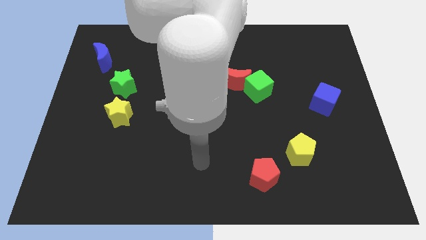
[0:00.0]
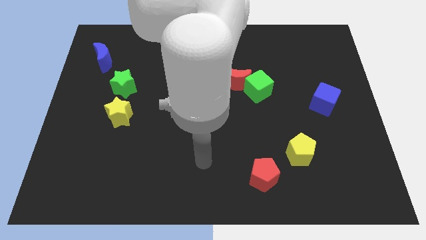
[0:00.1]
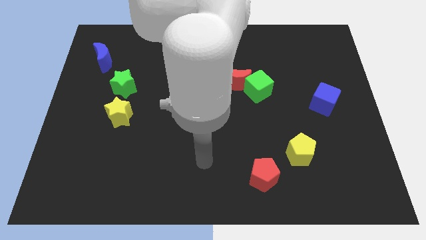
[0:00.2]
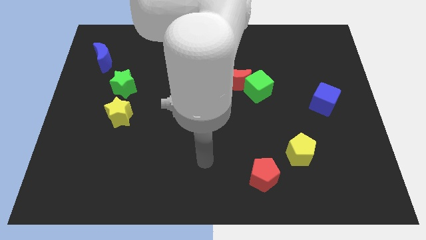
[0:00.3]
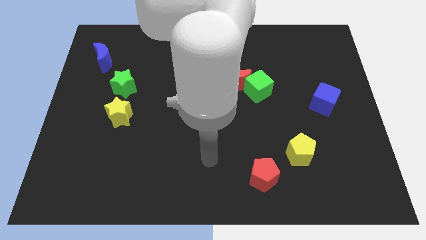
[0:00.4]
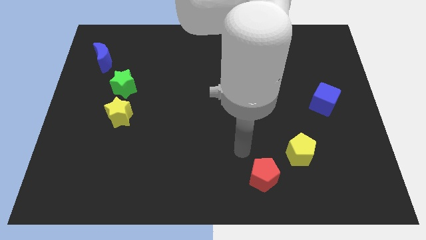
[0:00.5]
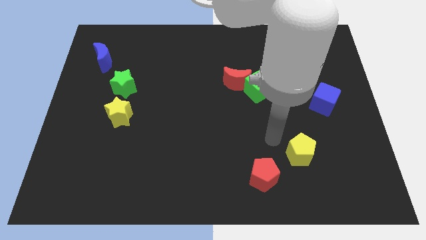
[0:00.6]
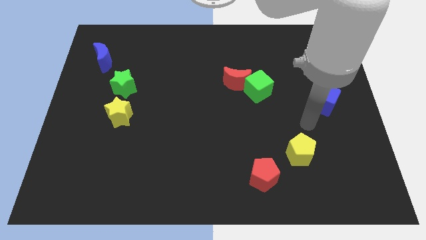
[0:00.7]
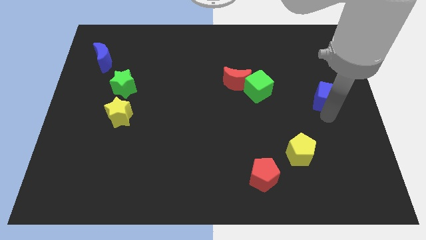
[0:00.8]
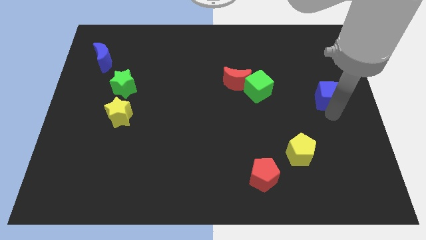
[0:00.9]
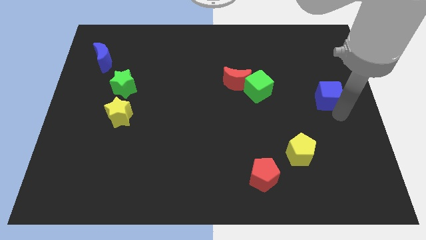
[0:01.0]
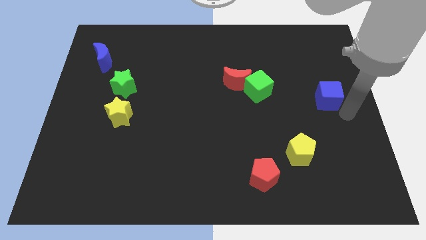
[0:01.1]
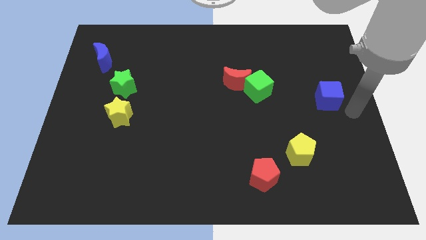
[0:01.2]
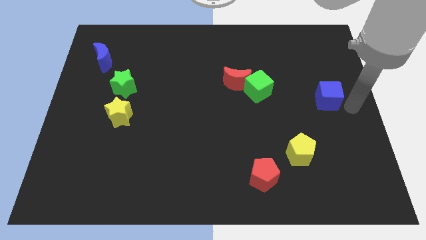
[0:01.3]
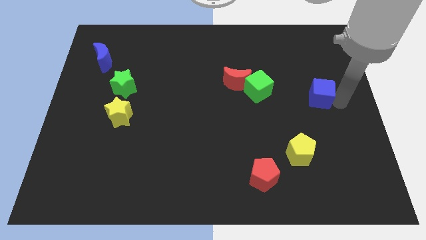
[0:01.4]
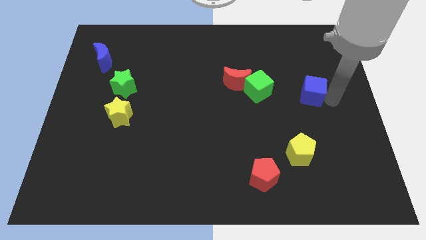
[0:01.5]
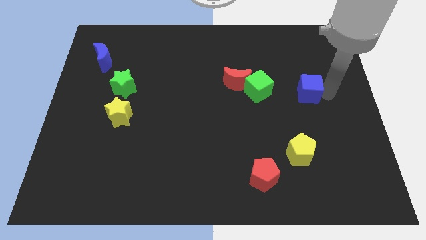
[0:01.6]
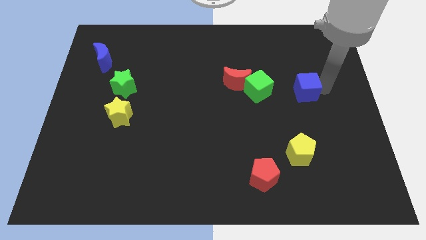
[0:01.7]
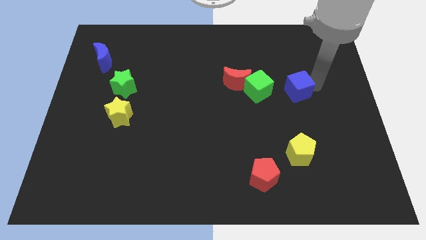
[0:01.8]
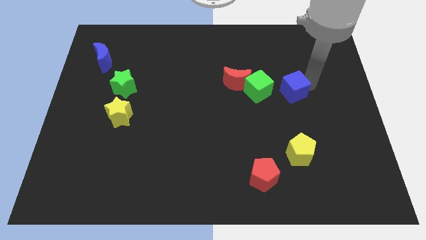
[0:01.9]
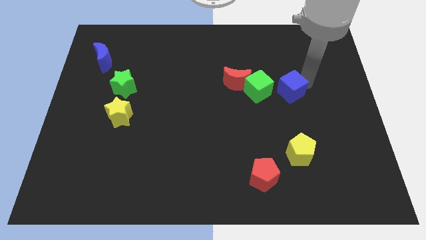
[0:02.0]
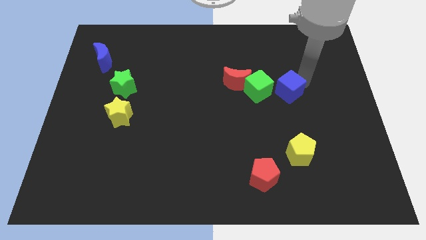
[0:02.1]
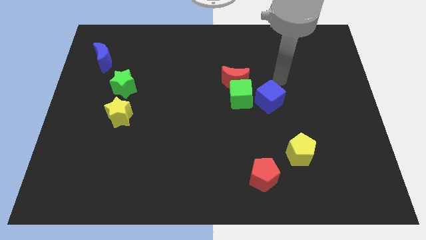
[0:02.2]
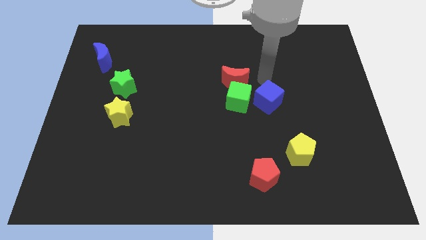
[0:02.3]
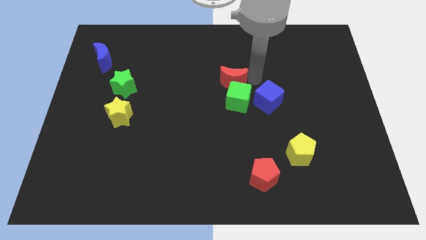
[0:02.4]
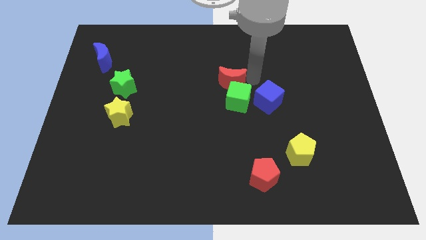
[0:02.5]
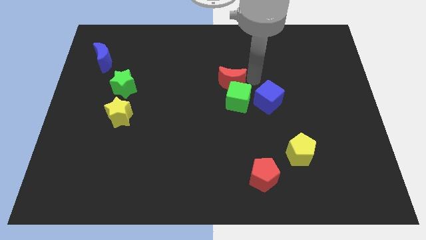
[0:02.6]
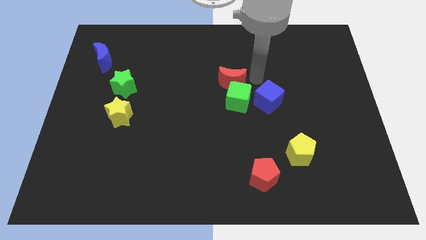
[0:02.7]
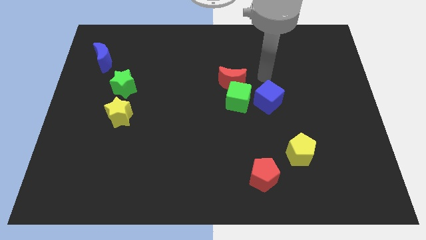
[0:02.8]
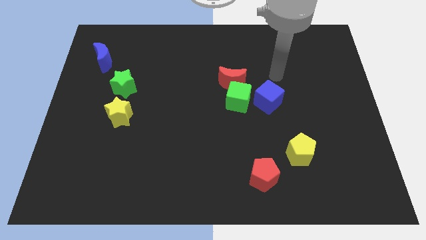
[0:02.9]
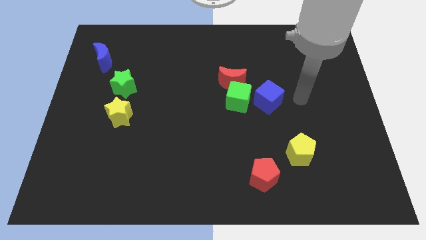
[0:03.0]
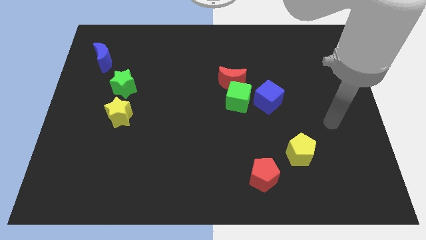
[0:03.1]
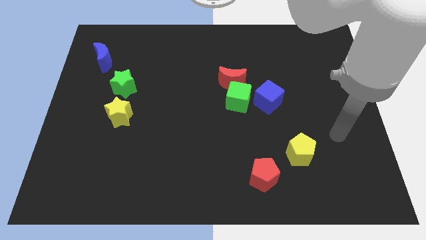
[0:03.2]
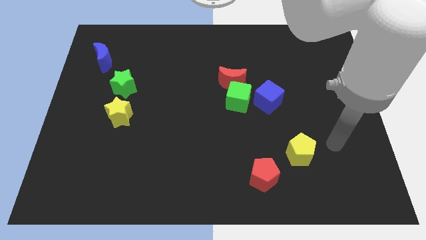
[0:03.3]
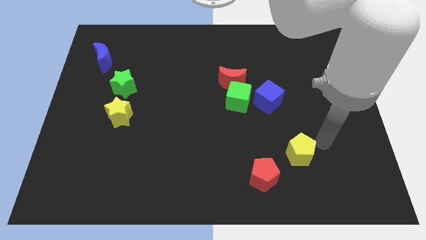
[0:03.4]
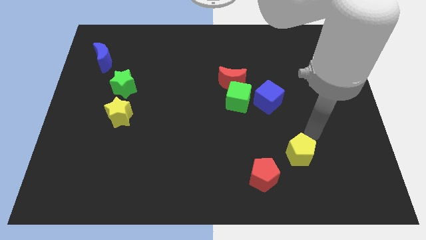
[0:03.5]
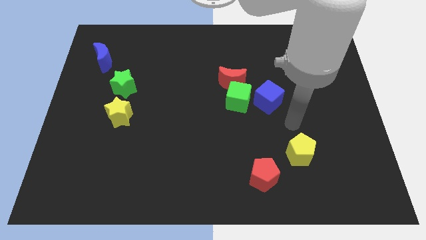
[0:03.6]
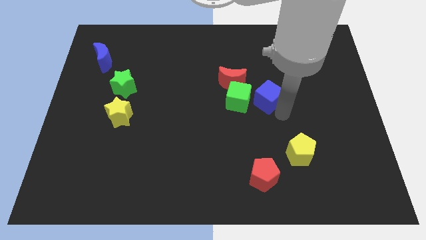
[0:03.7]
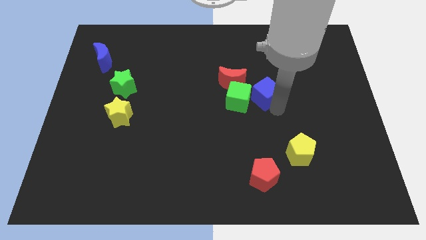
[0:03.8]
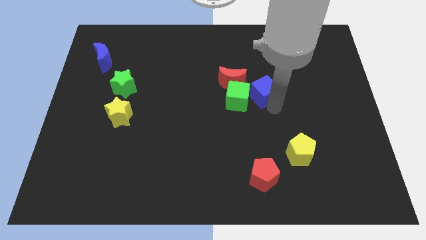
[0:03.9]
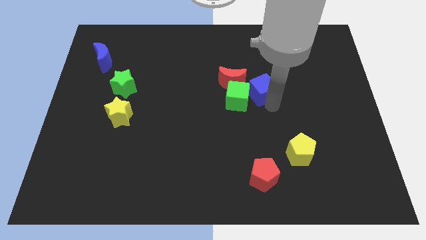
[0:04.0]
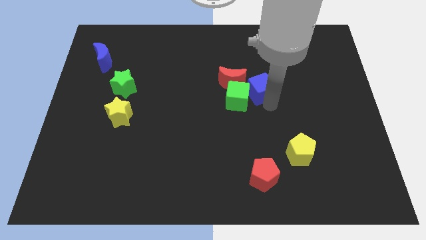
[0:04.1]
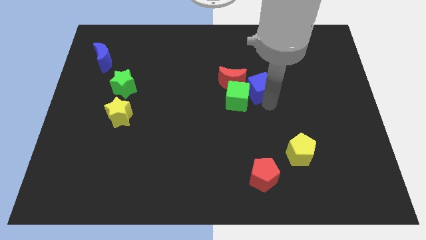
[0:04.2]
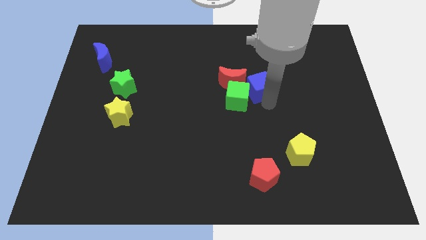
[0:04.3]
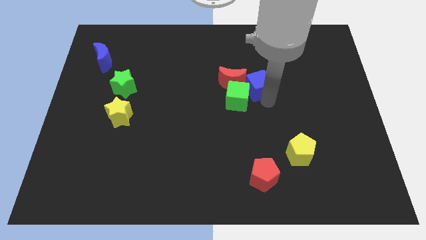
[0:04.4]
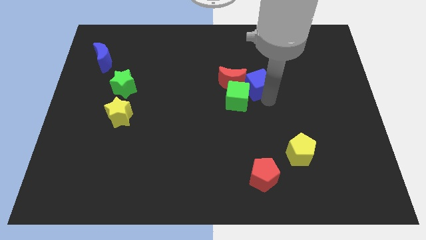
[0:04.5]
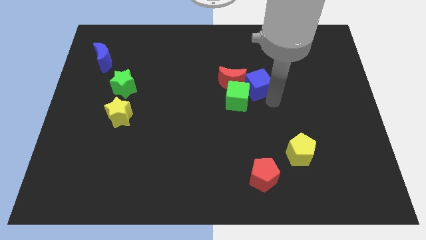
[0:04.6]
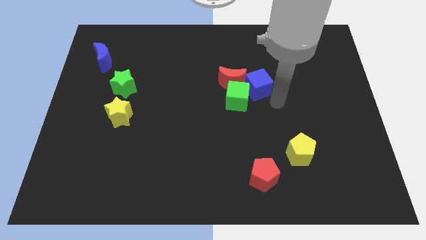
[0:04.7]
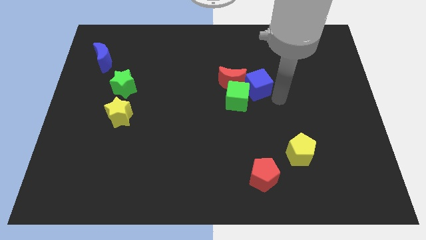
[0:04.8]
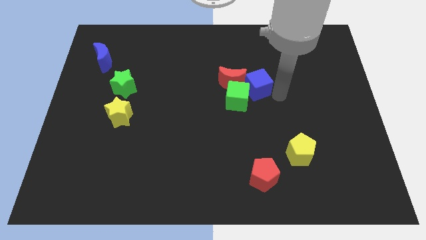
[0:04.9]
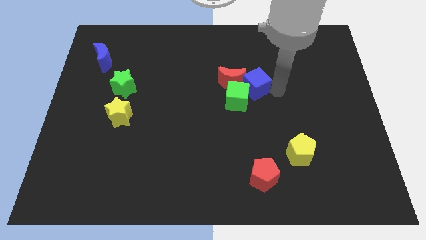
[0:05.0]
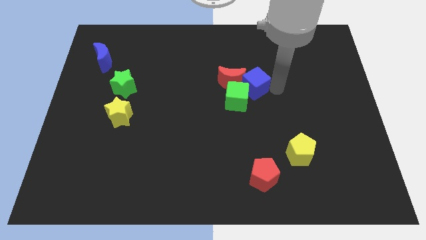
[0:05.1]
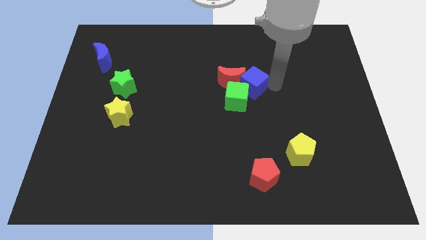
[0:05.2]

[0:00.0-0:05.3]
move the blue cube next to the red moon

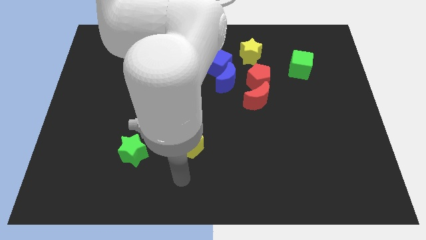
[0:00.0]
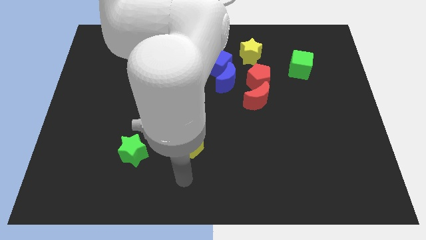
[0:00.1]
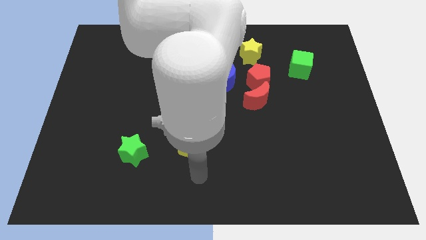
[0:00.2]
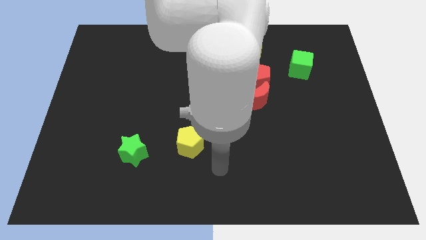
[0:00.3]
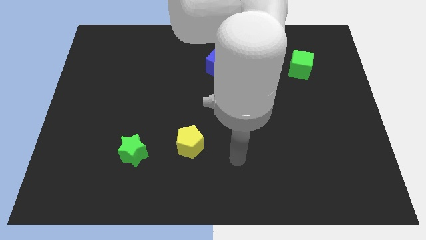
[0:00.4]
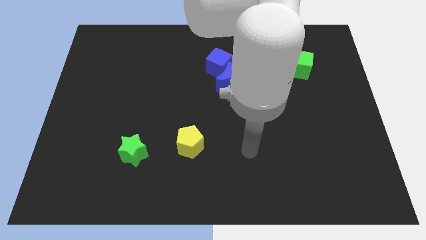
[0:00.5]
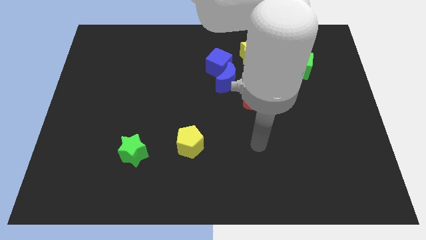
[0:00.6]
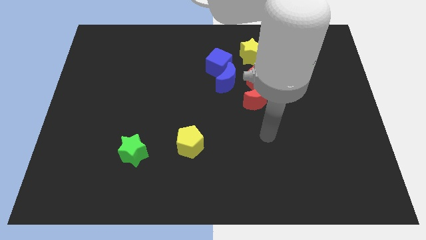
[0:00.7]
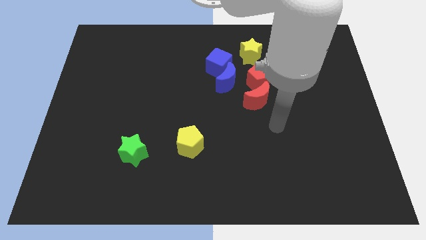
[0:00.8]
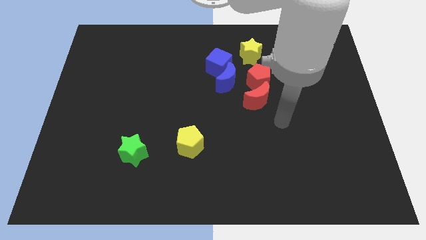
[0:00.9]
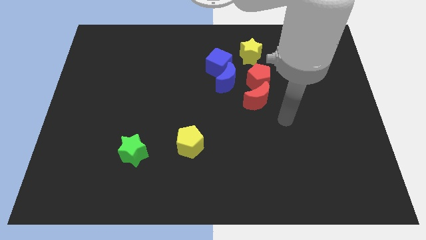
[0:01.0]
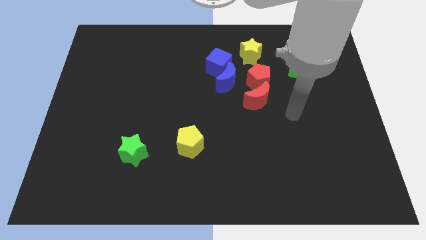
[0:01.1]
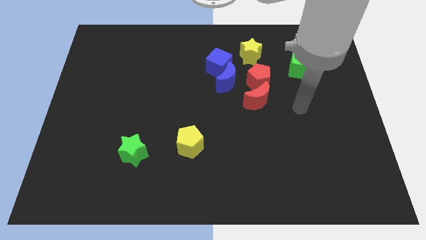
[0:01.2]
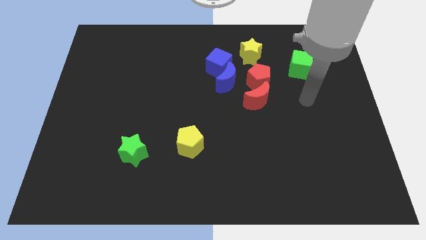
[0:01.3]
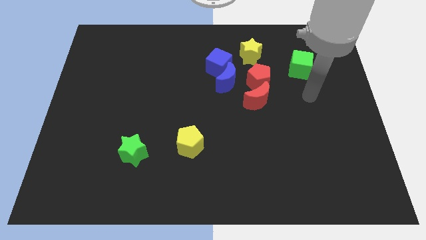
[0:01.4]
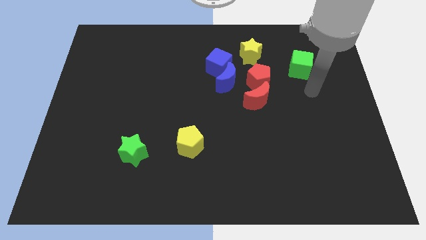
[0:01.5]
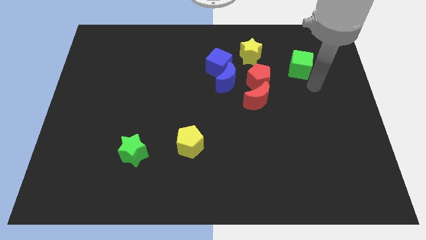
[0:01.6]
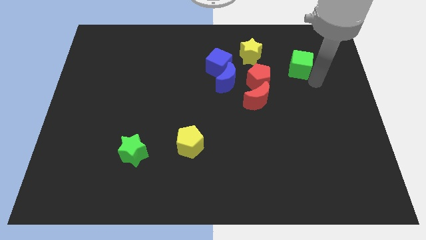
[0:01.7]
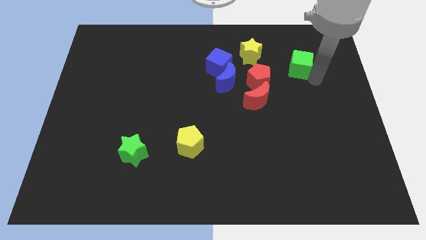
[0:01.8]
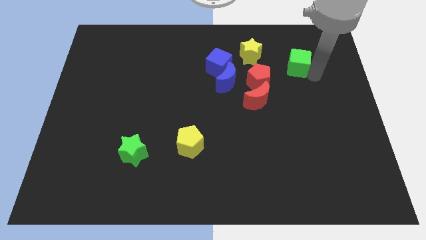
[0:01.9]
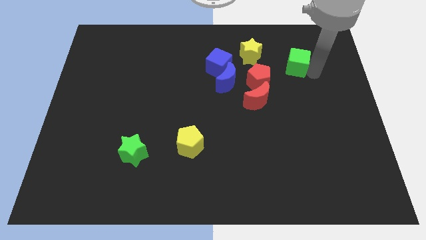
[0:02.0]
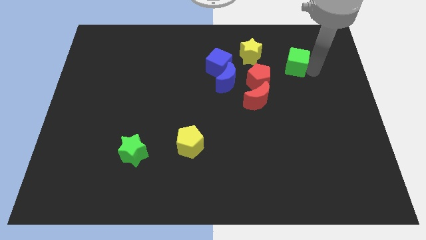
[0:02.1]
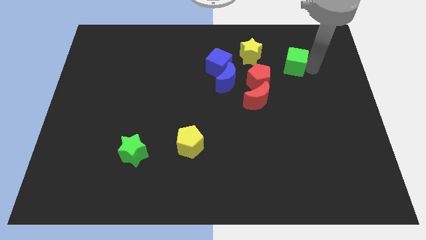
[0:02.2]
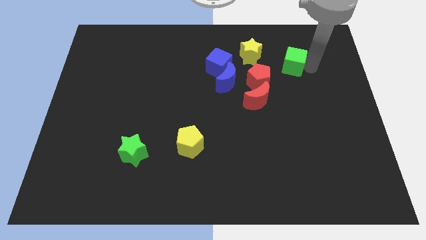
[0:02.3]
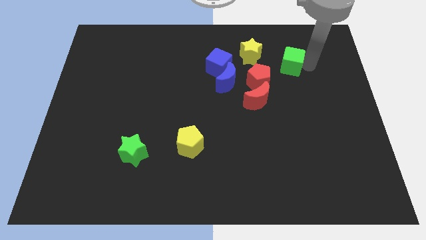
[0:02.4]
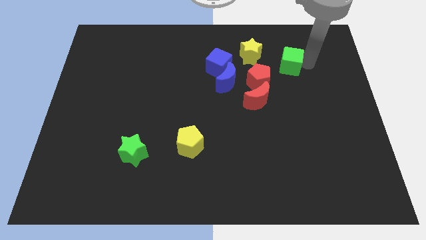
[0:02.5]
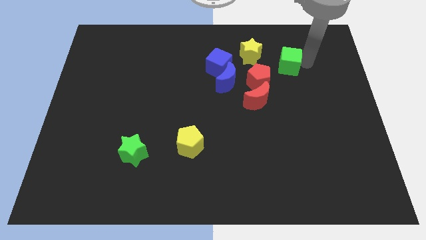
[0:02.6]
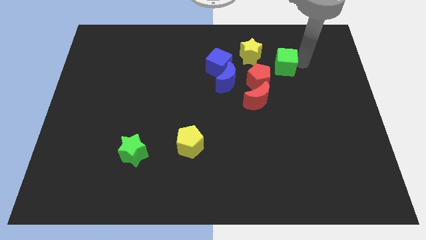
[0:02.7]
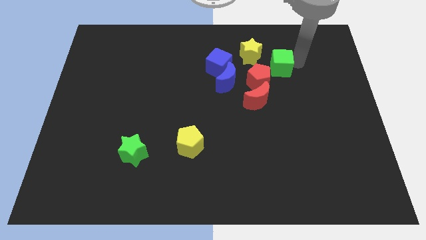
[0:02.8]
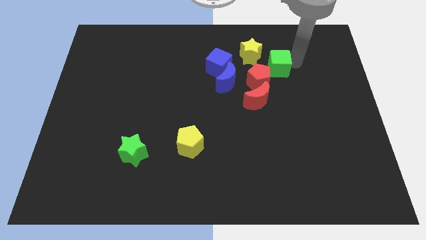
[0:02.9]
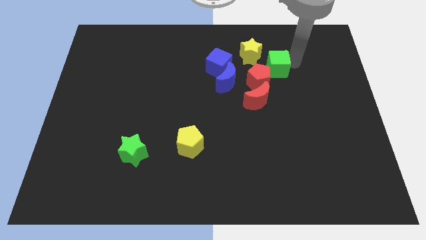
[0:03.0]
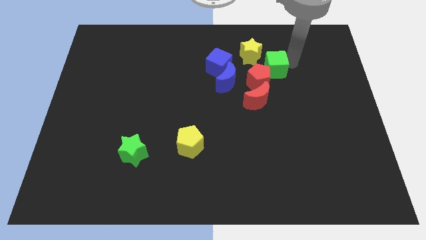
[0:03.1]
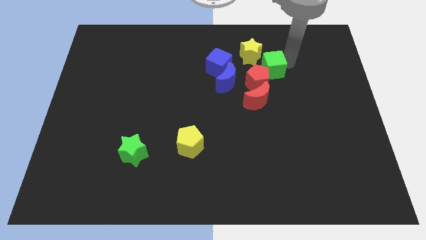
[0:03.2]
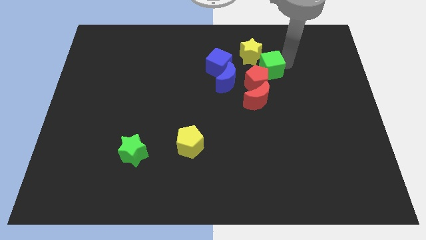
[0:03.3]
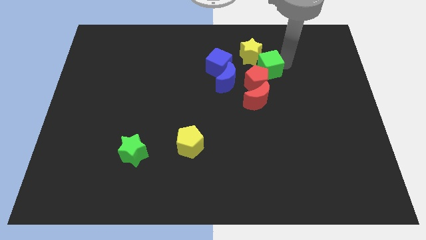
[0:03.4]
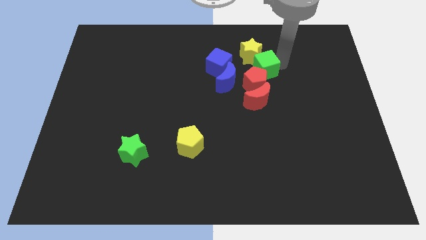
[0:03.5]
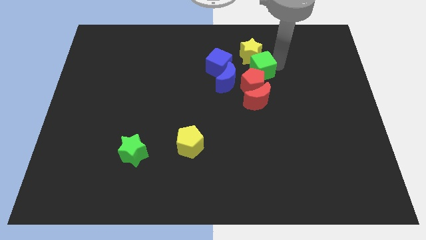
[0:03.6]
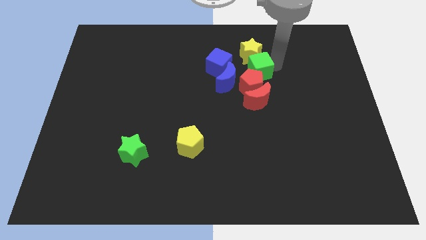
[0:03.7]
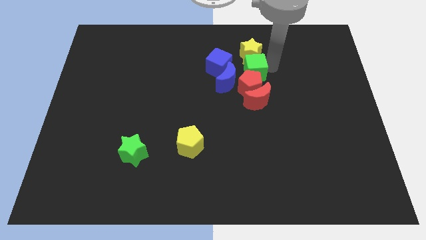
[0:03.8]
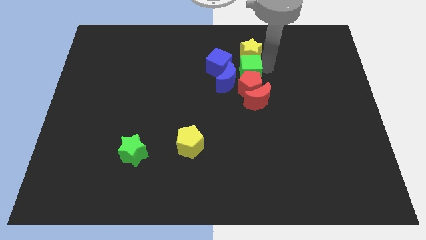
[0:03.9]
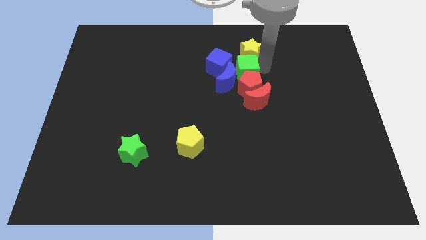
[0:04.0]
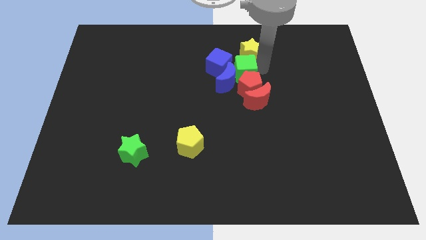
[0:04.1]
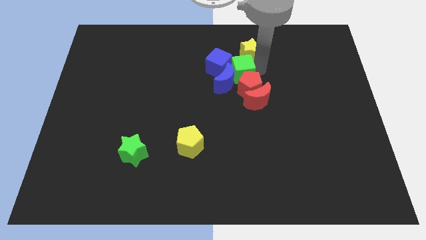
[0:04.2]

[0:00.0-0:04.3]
move the green cube towards the blue moon
